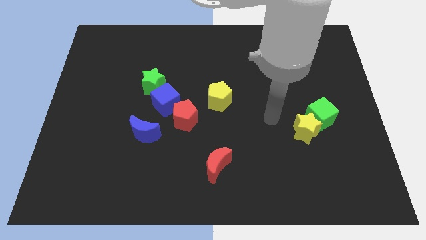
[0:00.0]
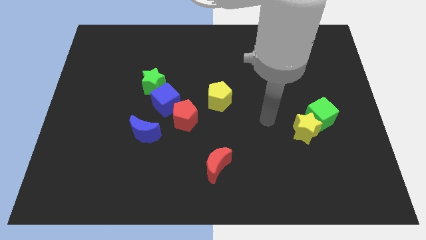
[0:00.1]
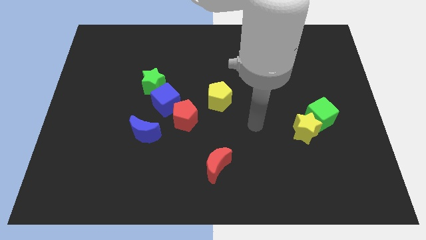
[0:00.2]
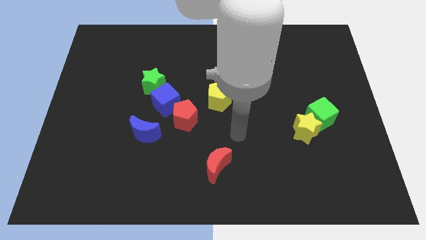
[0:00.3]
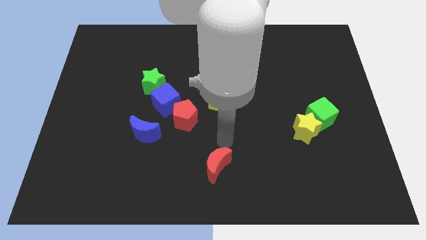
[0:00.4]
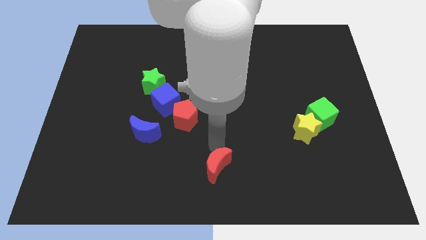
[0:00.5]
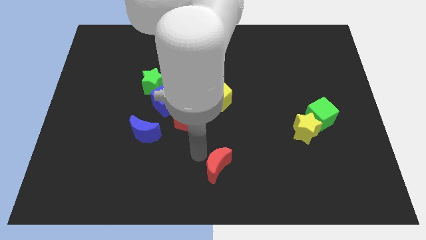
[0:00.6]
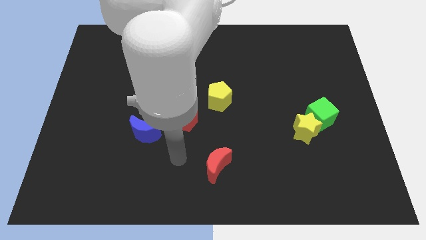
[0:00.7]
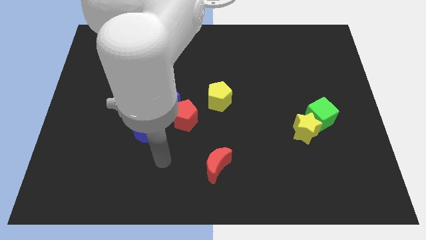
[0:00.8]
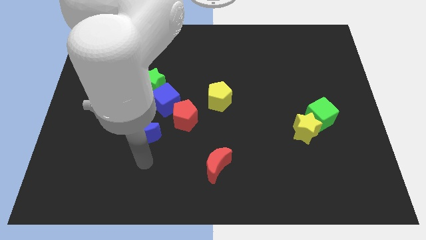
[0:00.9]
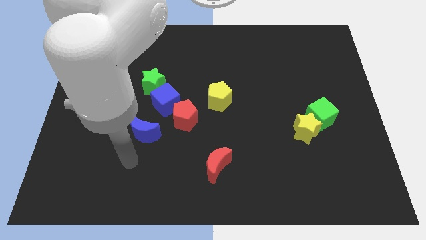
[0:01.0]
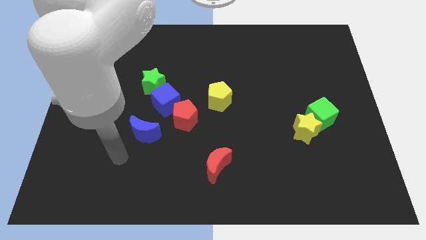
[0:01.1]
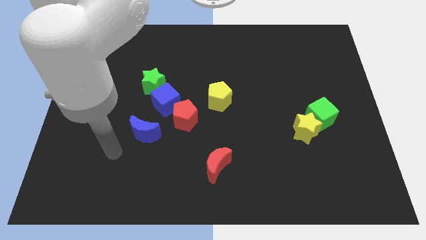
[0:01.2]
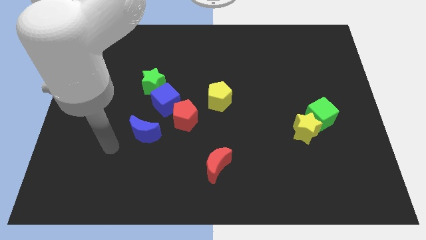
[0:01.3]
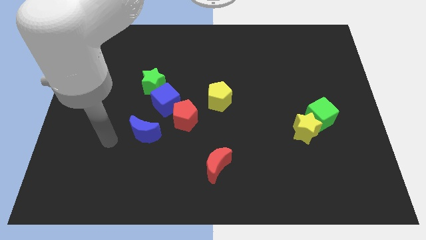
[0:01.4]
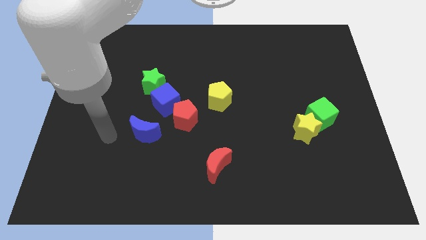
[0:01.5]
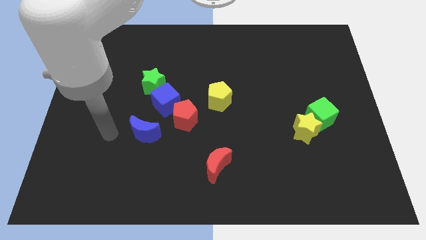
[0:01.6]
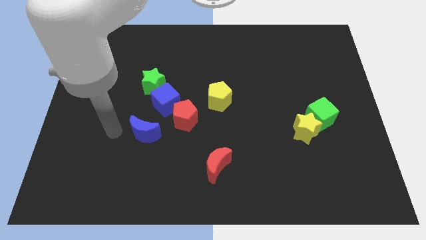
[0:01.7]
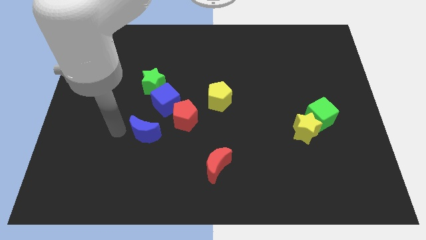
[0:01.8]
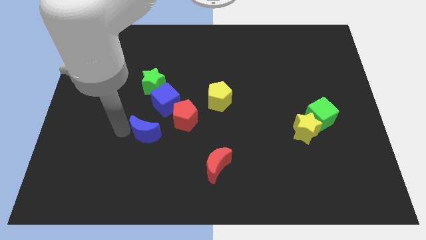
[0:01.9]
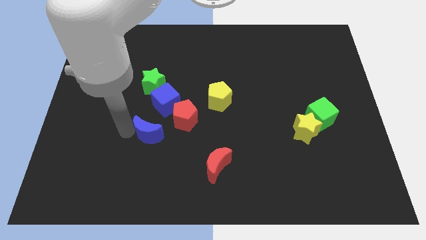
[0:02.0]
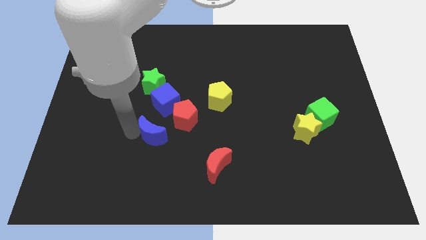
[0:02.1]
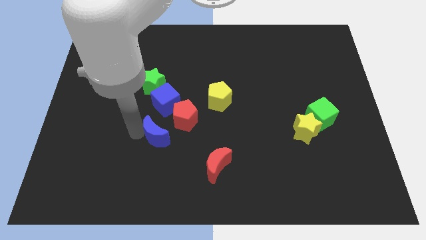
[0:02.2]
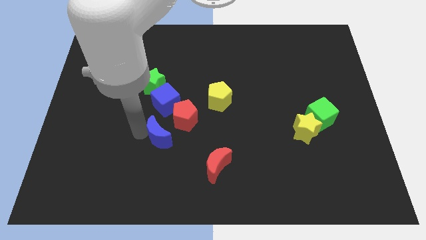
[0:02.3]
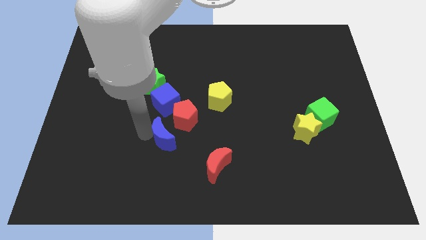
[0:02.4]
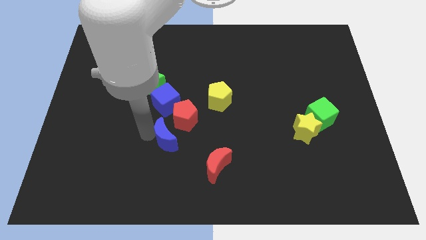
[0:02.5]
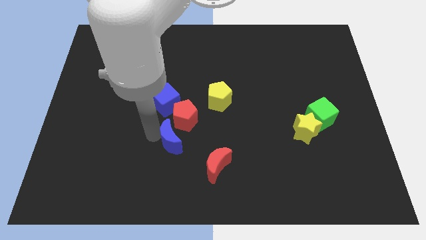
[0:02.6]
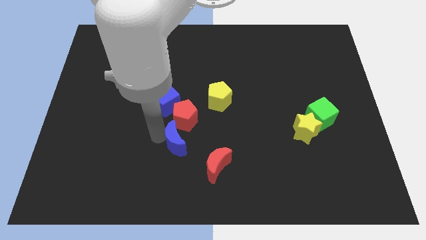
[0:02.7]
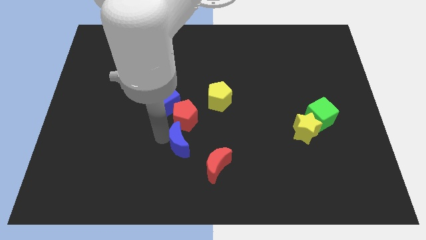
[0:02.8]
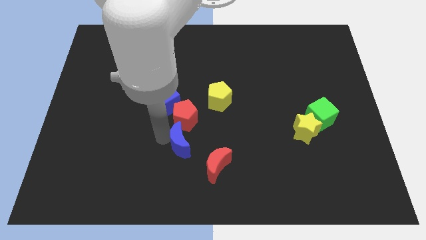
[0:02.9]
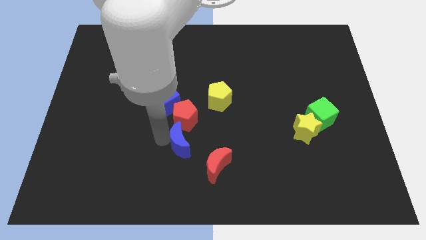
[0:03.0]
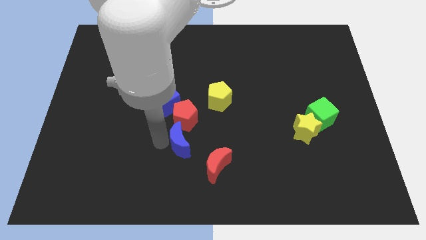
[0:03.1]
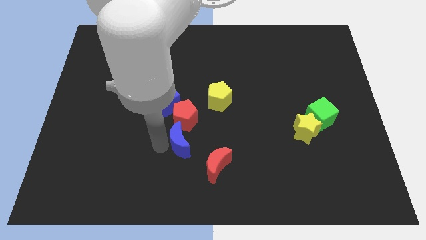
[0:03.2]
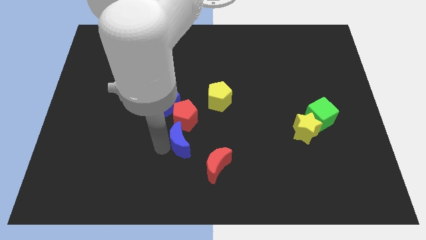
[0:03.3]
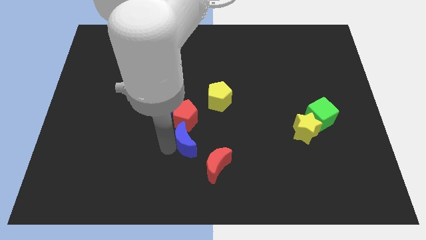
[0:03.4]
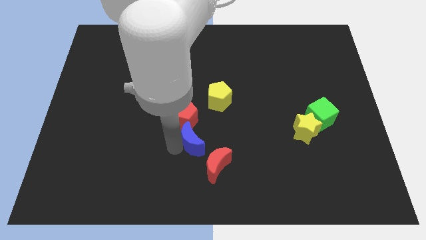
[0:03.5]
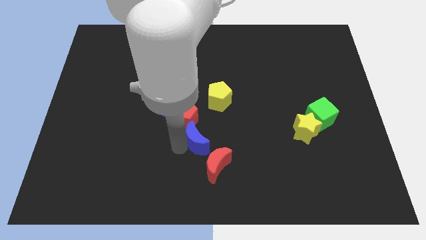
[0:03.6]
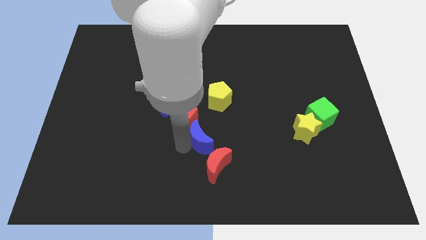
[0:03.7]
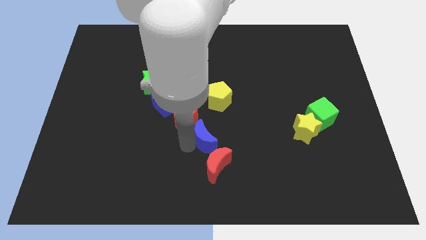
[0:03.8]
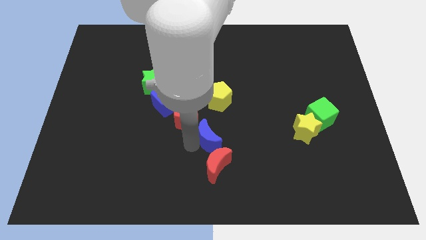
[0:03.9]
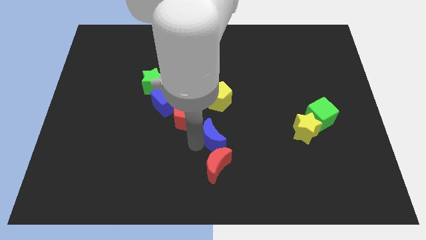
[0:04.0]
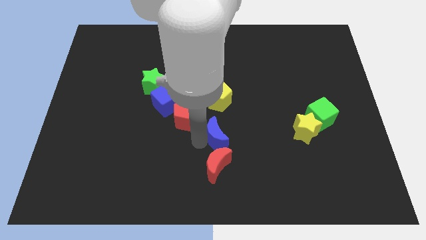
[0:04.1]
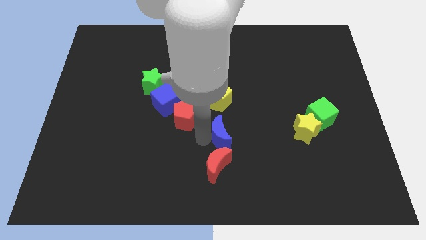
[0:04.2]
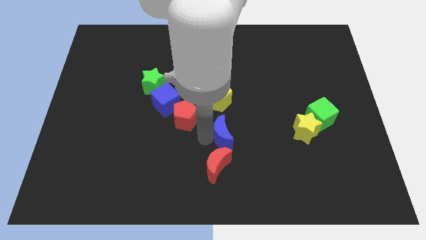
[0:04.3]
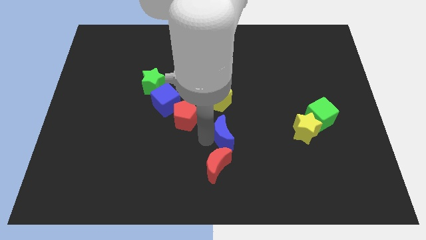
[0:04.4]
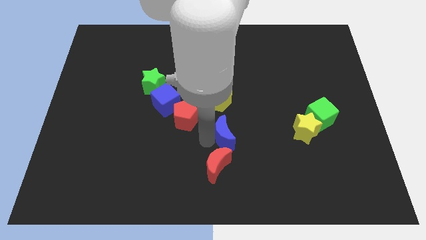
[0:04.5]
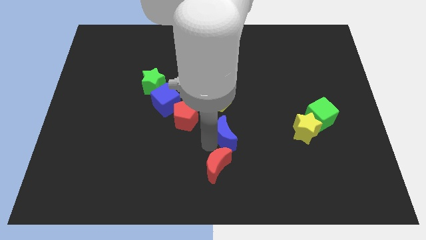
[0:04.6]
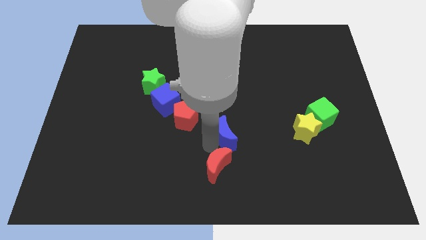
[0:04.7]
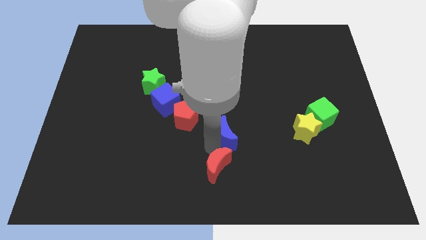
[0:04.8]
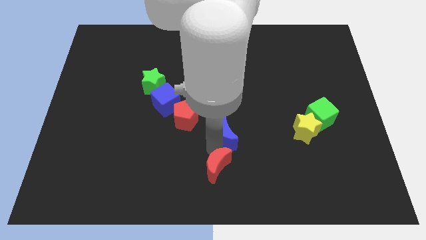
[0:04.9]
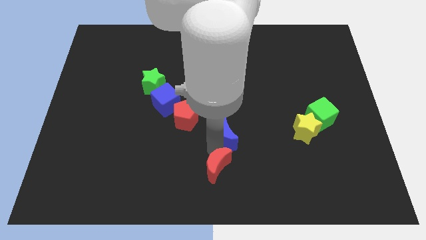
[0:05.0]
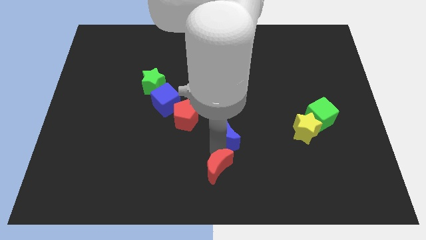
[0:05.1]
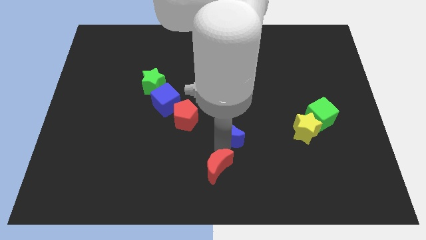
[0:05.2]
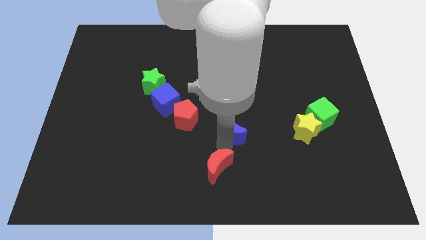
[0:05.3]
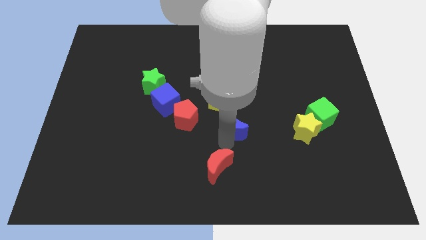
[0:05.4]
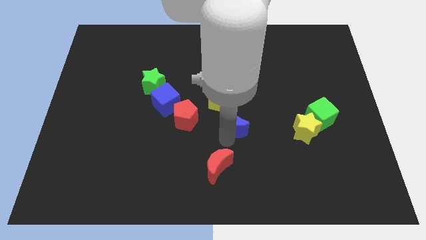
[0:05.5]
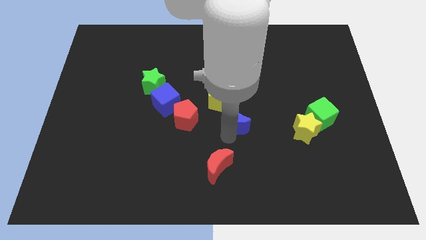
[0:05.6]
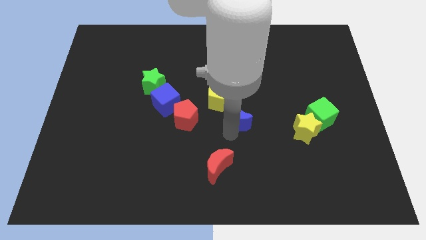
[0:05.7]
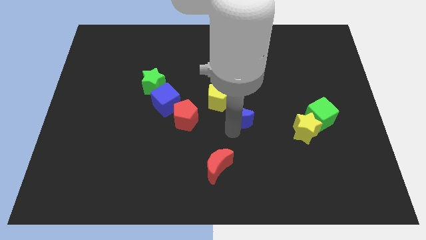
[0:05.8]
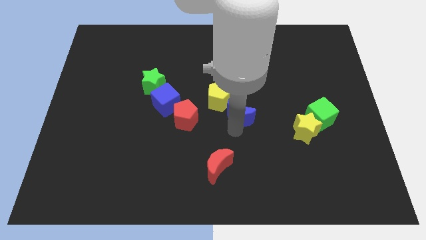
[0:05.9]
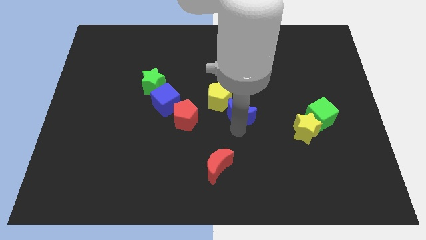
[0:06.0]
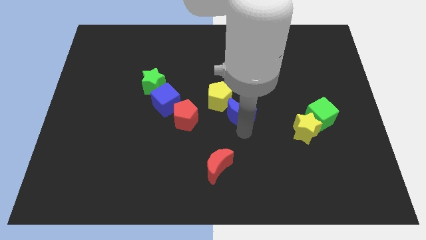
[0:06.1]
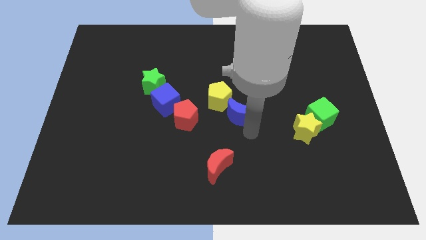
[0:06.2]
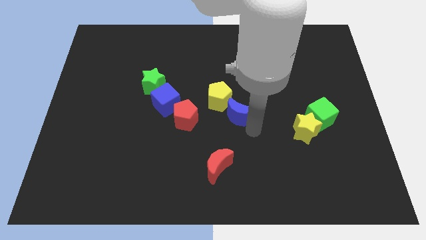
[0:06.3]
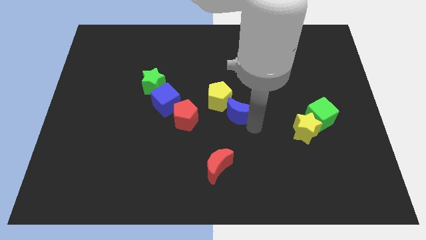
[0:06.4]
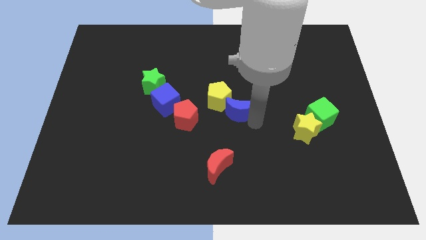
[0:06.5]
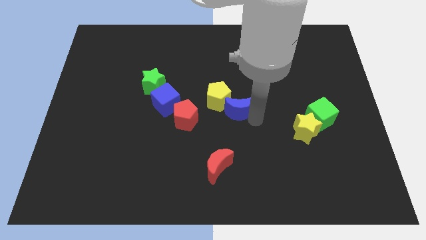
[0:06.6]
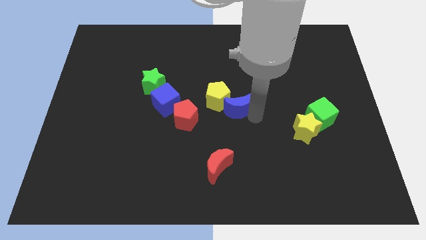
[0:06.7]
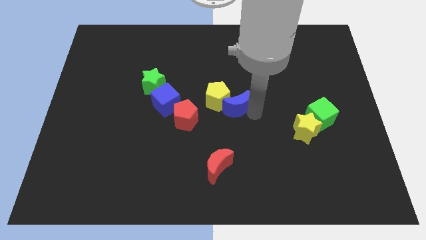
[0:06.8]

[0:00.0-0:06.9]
move the blue moon towards the yellow pentagon

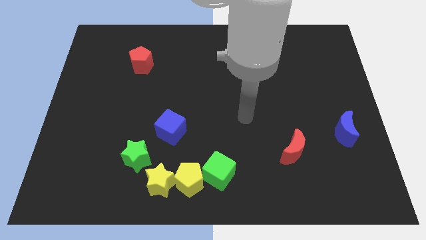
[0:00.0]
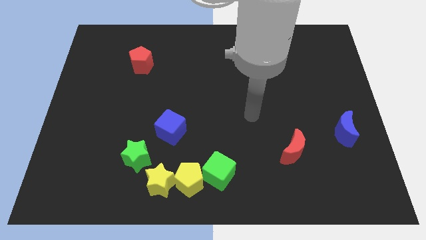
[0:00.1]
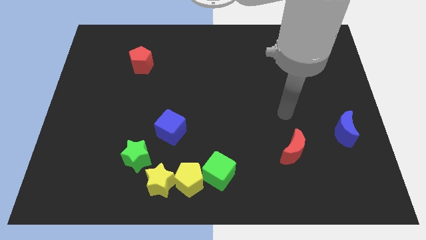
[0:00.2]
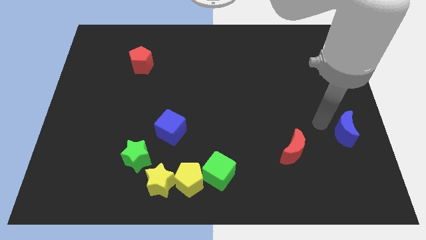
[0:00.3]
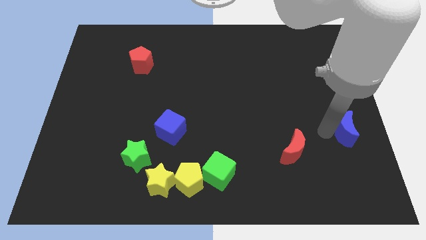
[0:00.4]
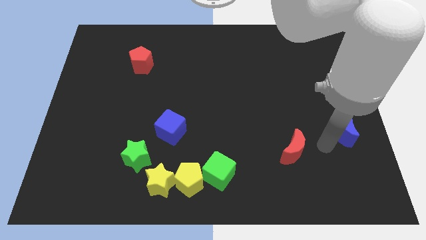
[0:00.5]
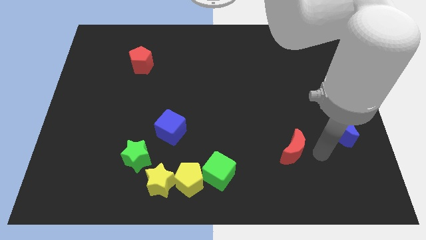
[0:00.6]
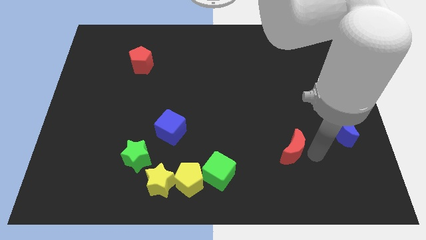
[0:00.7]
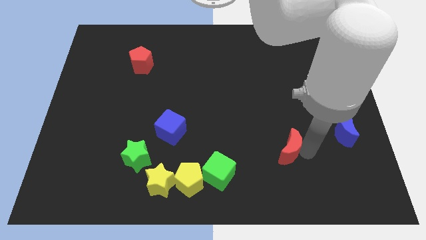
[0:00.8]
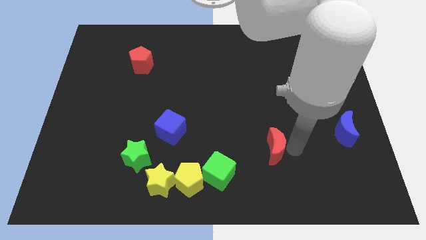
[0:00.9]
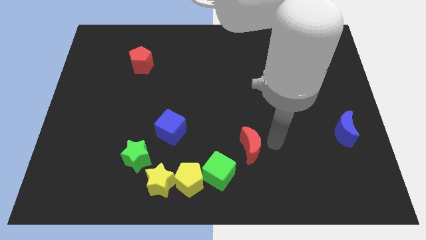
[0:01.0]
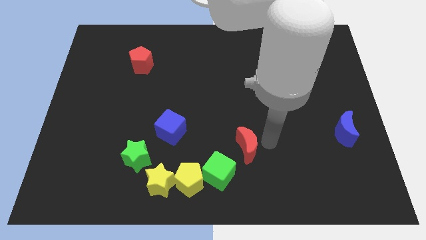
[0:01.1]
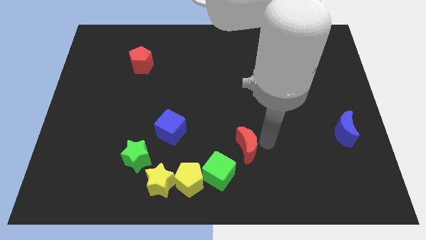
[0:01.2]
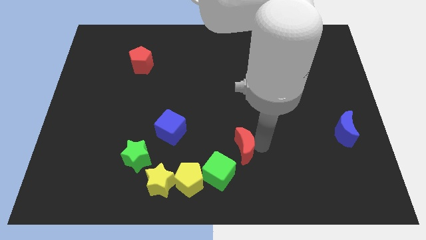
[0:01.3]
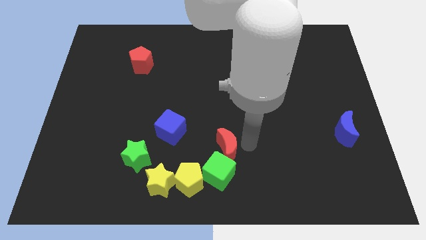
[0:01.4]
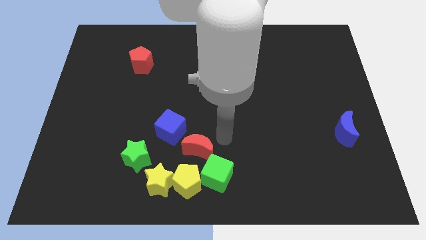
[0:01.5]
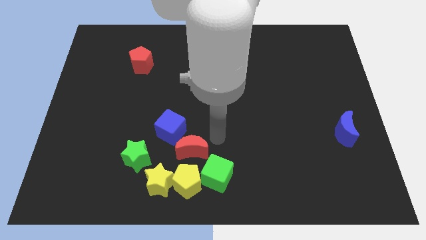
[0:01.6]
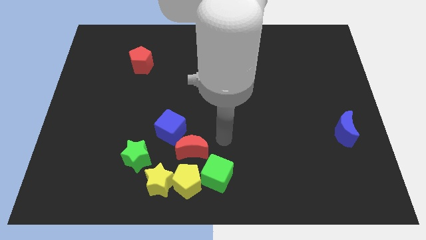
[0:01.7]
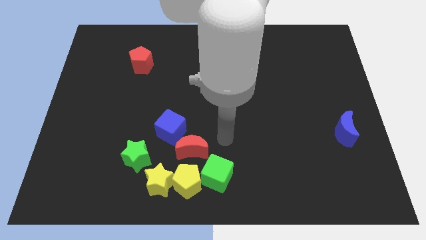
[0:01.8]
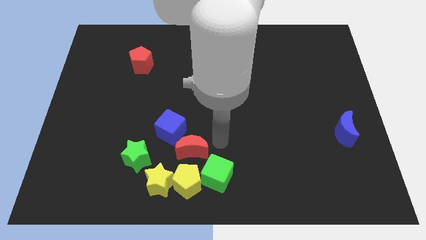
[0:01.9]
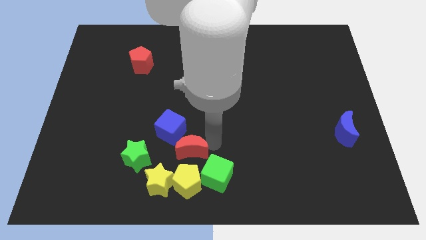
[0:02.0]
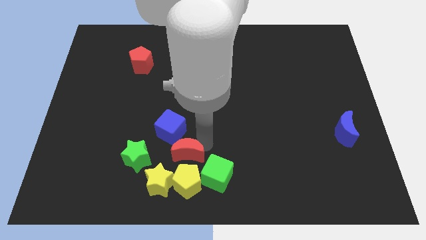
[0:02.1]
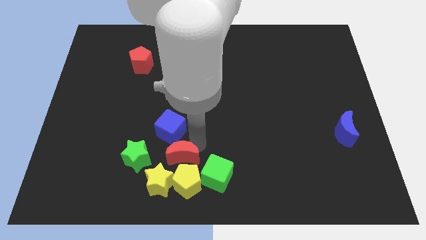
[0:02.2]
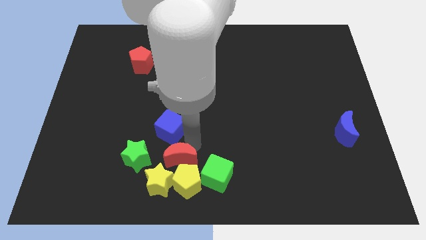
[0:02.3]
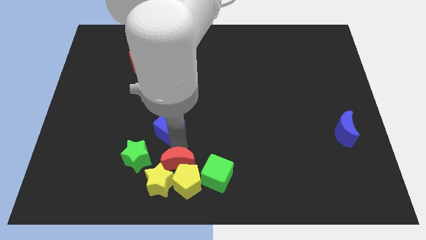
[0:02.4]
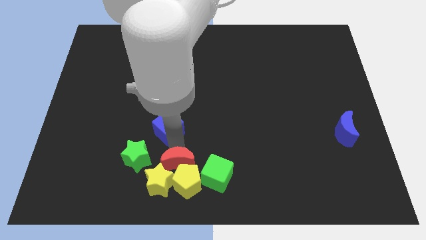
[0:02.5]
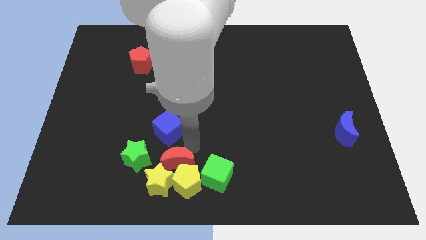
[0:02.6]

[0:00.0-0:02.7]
move the red moon to the yellow star
